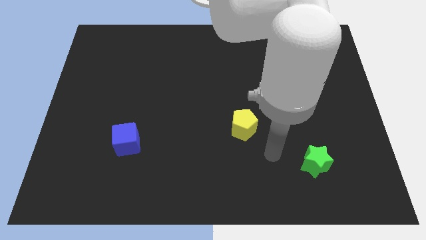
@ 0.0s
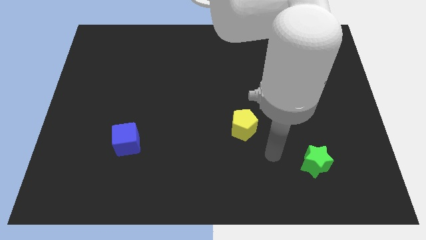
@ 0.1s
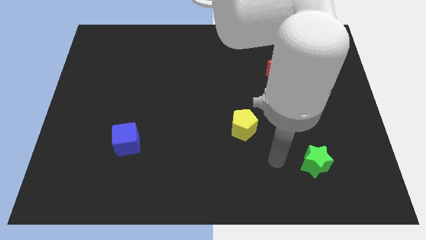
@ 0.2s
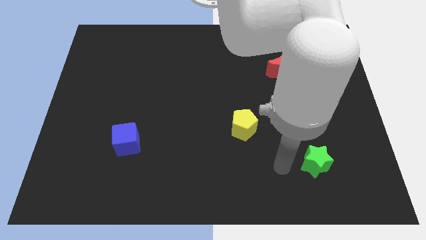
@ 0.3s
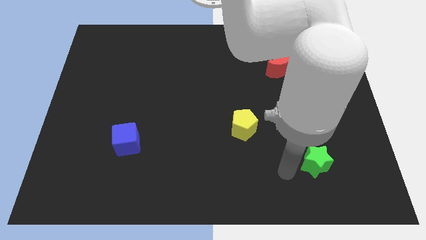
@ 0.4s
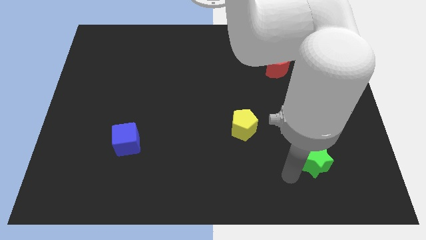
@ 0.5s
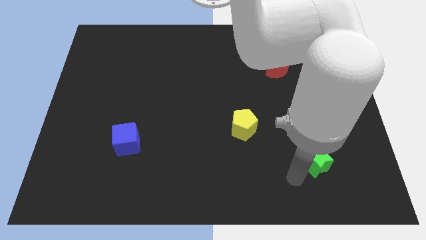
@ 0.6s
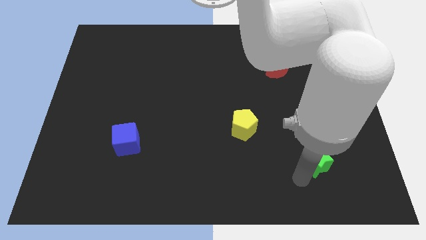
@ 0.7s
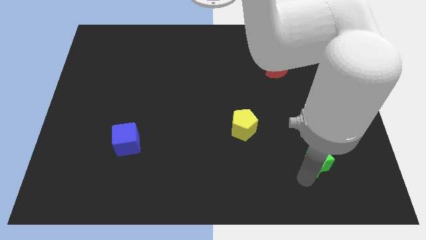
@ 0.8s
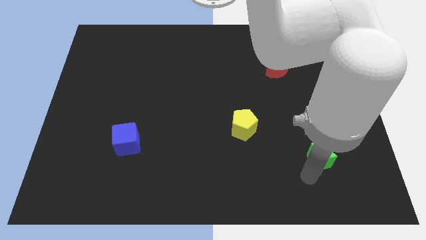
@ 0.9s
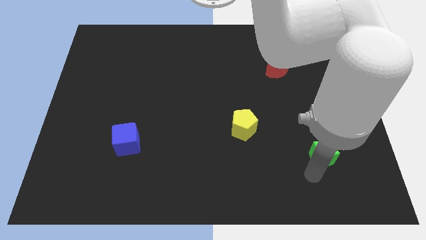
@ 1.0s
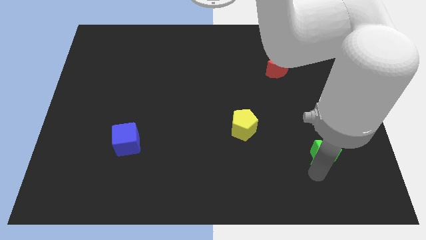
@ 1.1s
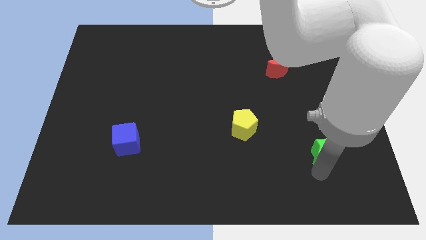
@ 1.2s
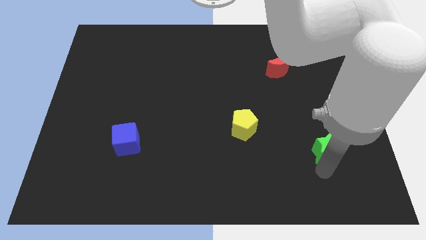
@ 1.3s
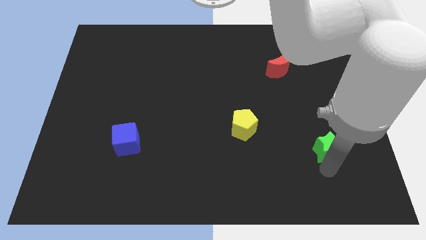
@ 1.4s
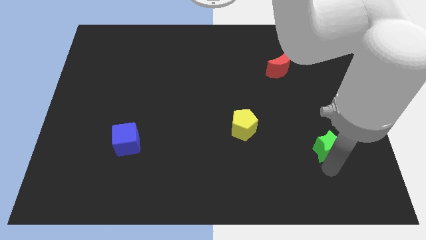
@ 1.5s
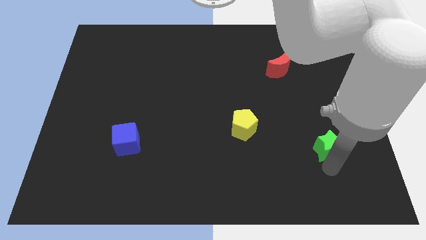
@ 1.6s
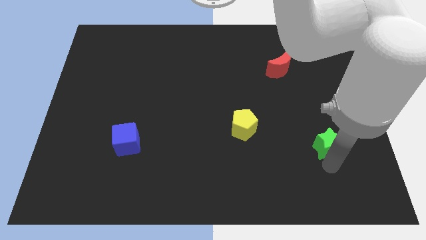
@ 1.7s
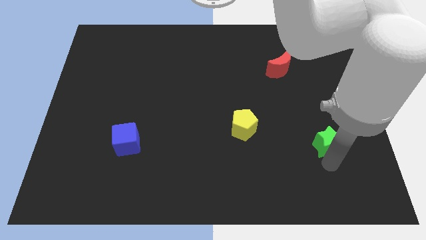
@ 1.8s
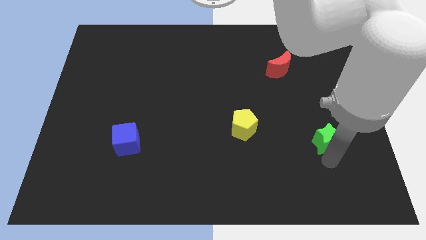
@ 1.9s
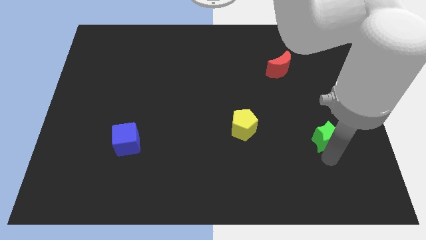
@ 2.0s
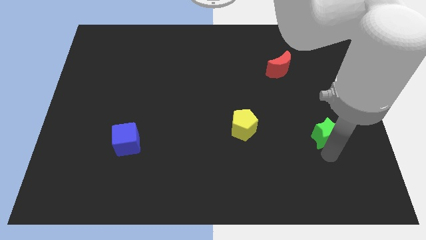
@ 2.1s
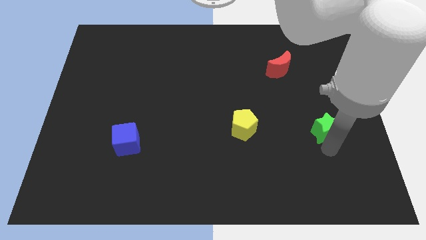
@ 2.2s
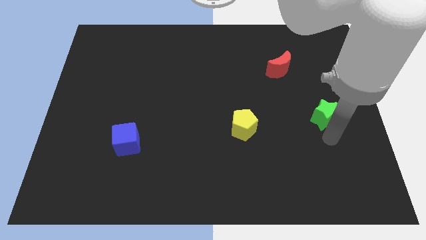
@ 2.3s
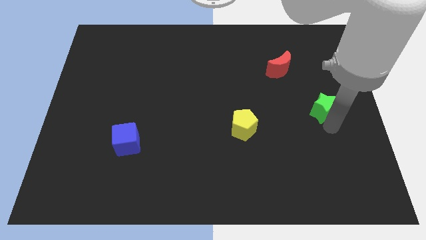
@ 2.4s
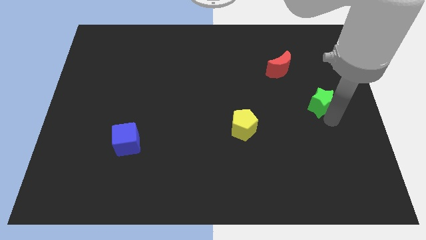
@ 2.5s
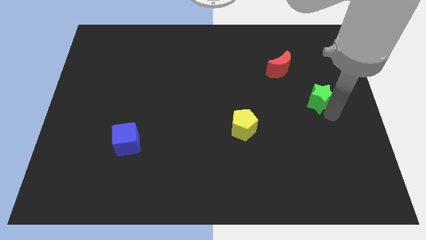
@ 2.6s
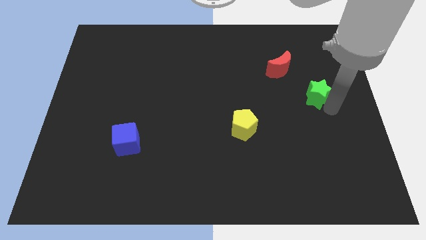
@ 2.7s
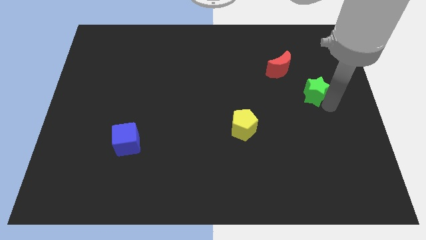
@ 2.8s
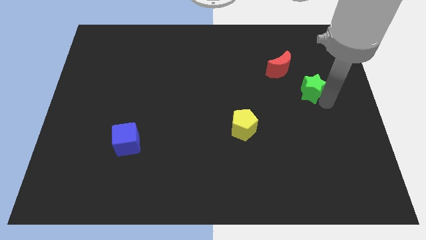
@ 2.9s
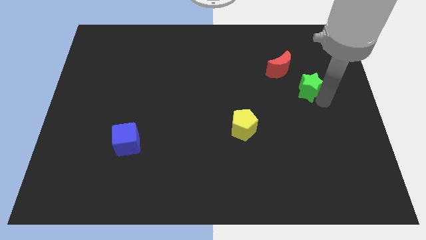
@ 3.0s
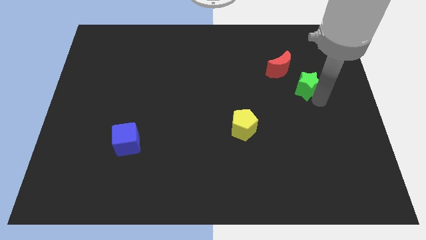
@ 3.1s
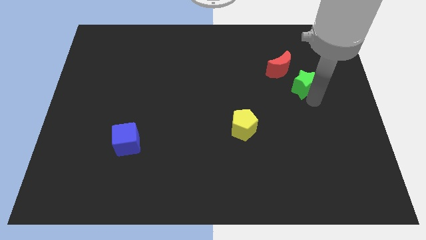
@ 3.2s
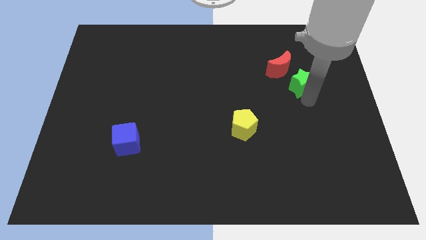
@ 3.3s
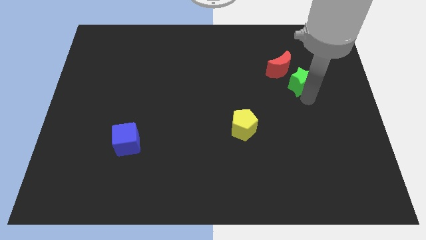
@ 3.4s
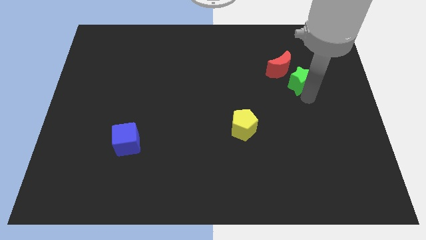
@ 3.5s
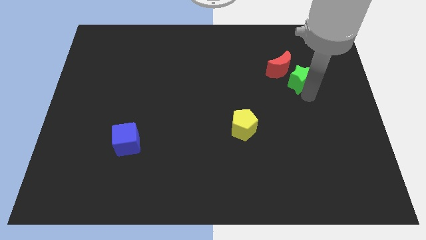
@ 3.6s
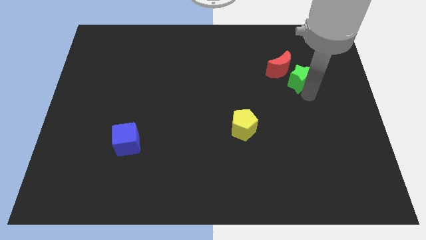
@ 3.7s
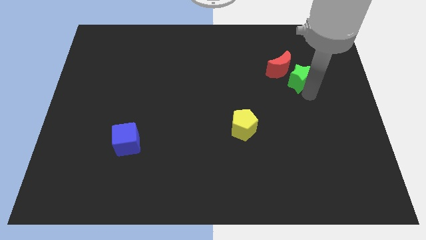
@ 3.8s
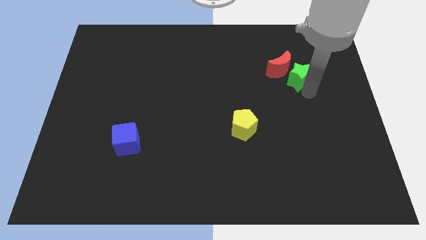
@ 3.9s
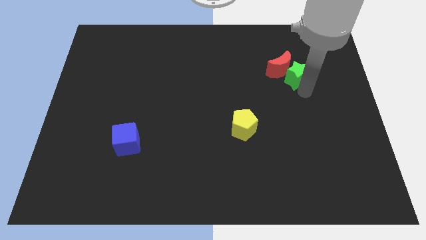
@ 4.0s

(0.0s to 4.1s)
move the green block to the moon

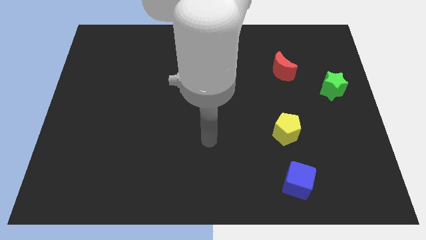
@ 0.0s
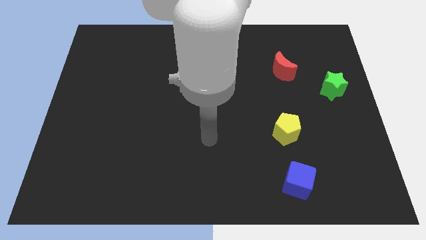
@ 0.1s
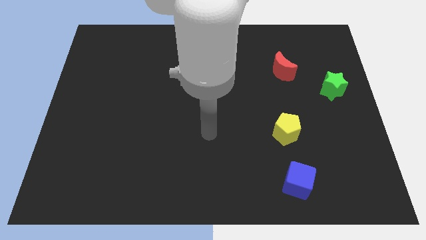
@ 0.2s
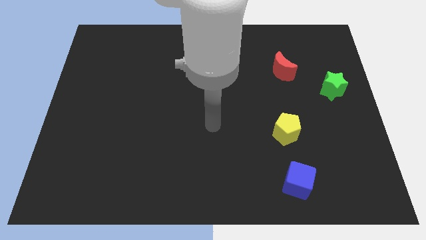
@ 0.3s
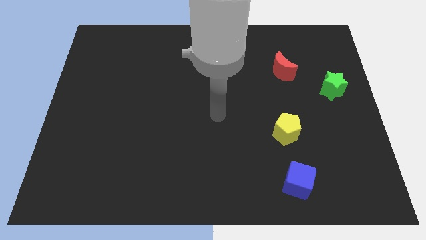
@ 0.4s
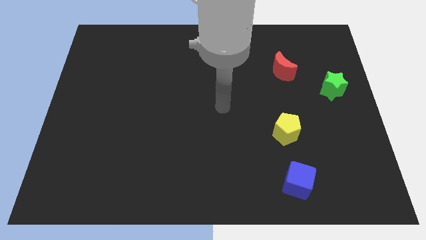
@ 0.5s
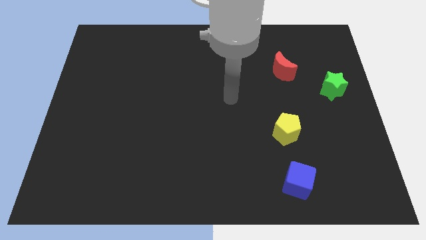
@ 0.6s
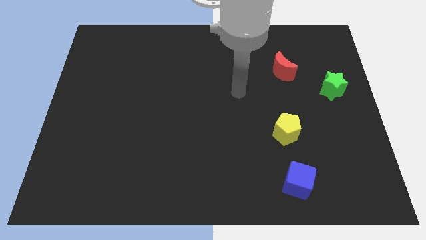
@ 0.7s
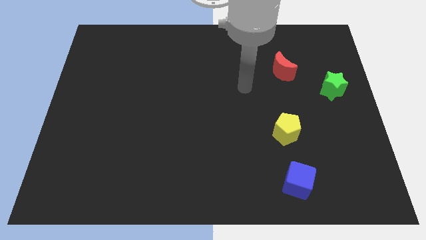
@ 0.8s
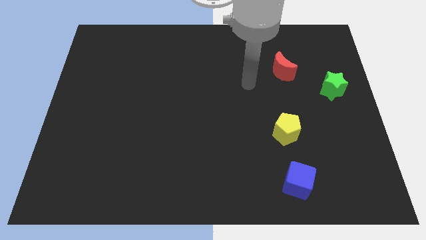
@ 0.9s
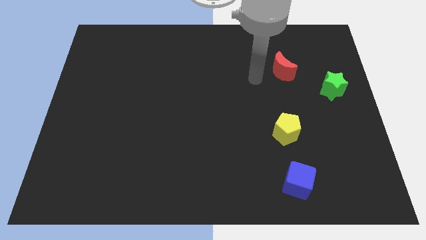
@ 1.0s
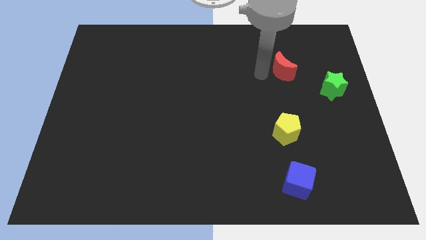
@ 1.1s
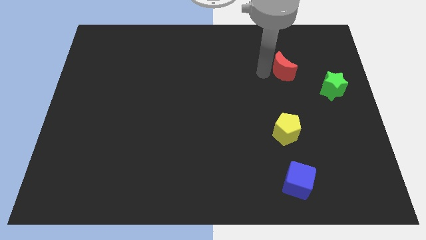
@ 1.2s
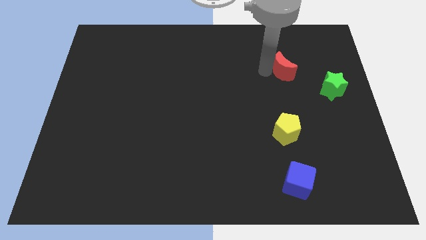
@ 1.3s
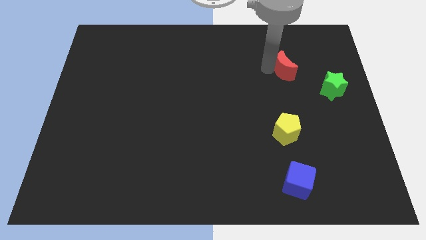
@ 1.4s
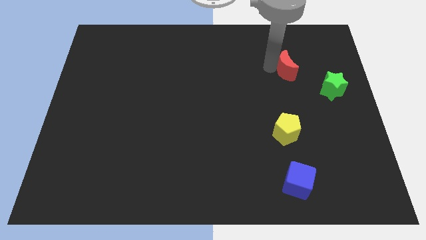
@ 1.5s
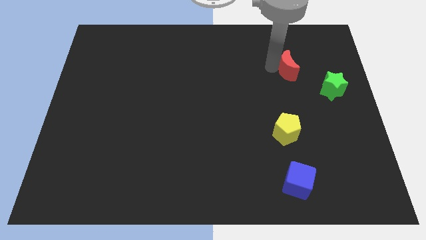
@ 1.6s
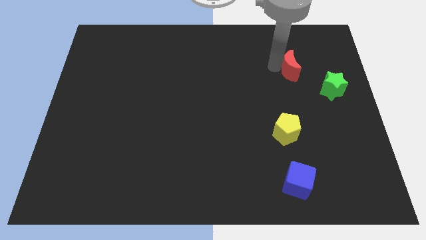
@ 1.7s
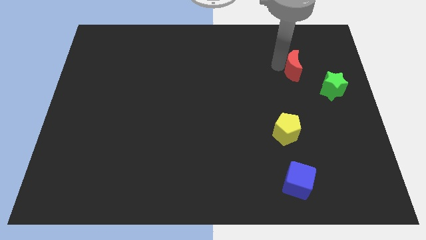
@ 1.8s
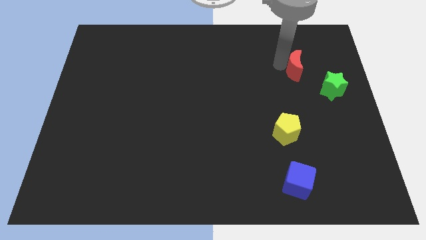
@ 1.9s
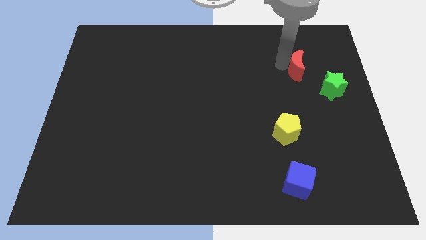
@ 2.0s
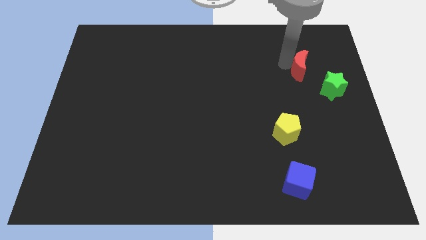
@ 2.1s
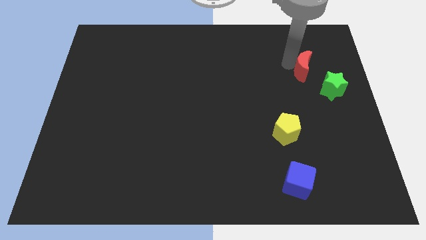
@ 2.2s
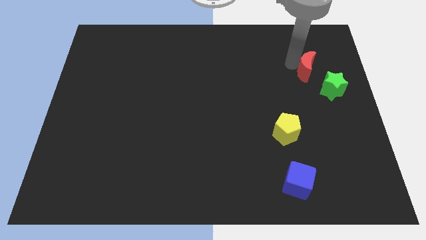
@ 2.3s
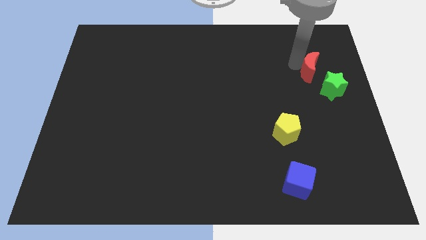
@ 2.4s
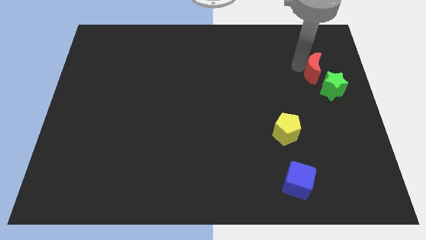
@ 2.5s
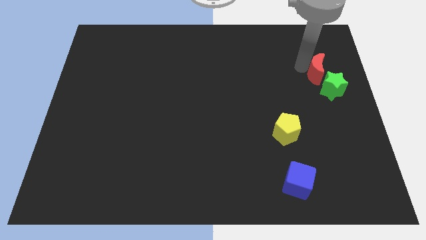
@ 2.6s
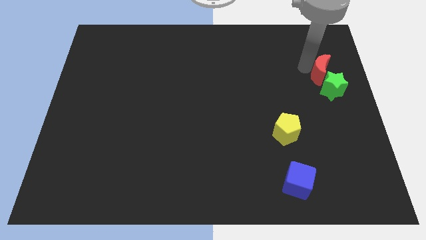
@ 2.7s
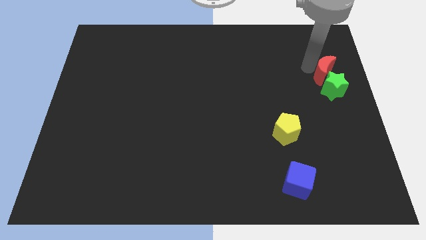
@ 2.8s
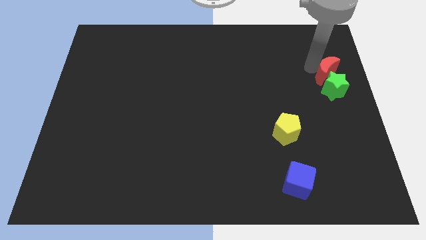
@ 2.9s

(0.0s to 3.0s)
move the moon to the green star

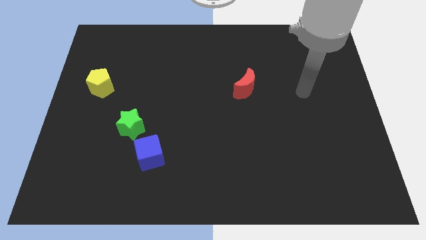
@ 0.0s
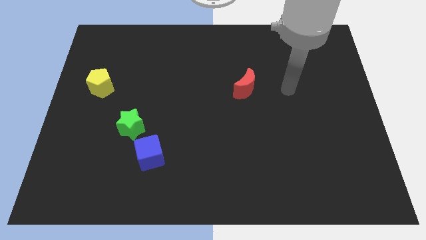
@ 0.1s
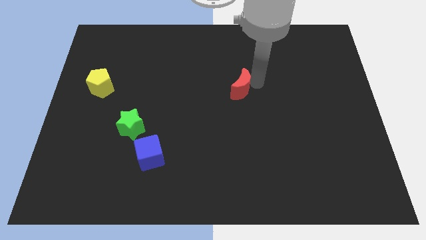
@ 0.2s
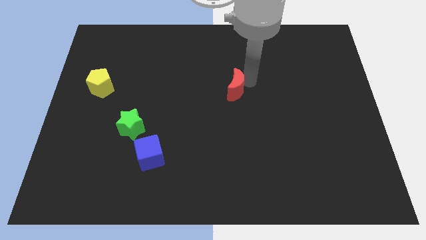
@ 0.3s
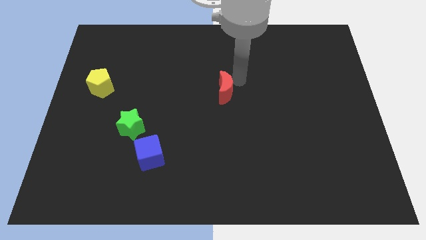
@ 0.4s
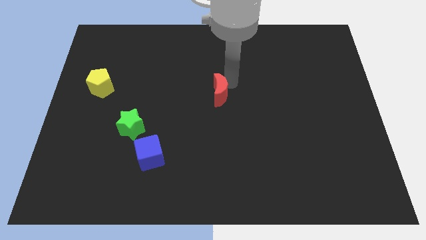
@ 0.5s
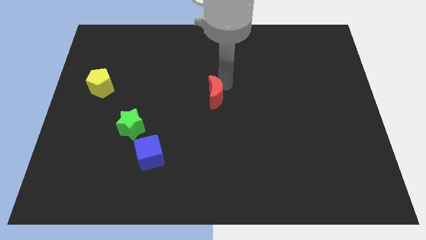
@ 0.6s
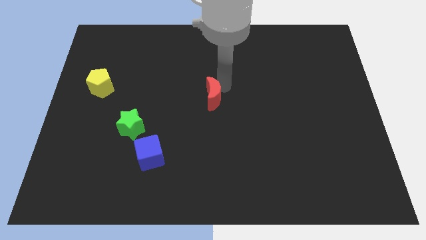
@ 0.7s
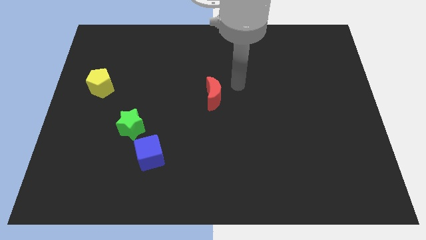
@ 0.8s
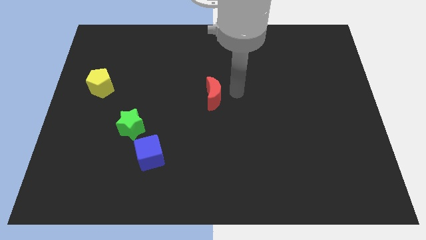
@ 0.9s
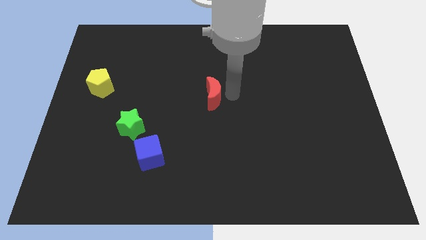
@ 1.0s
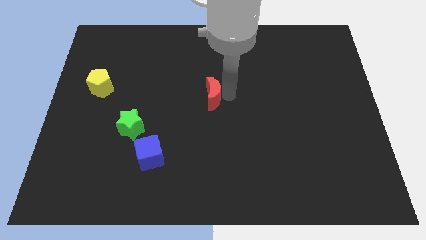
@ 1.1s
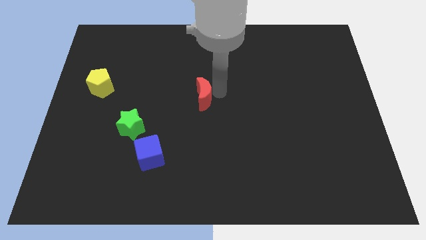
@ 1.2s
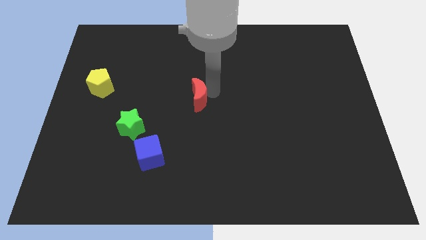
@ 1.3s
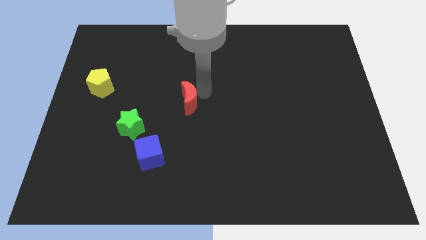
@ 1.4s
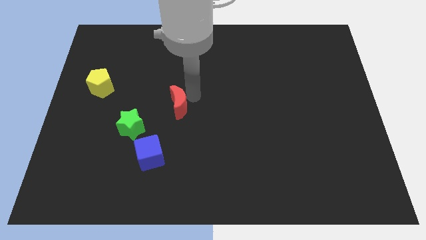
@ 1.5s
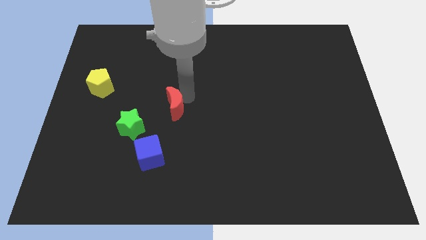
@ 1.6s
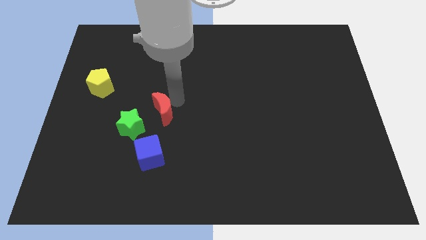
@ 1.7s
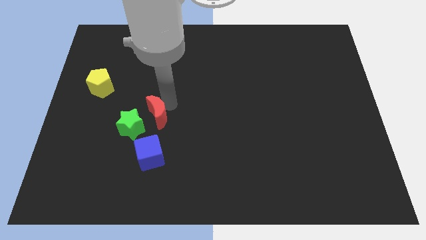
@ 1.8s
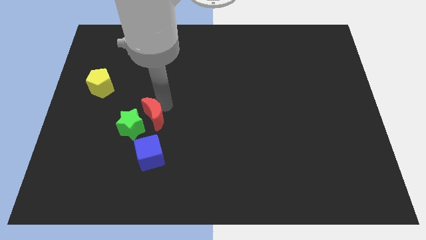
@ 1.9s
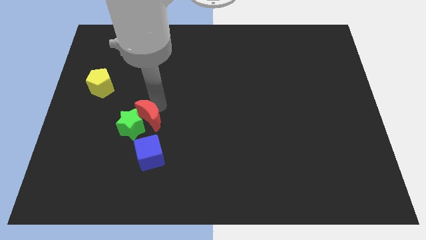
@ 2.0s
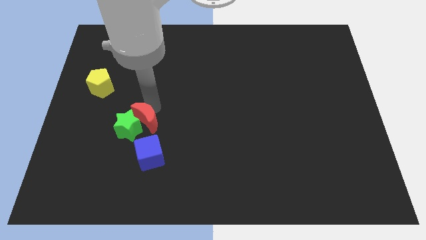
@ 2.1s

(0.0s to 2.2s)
slide the moon towards the green block
